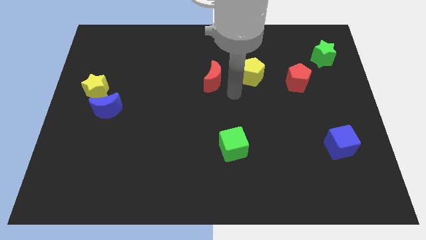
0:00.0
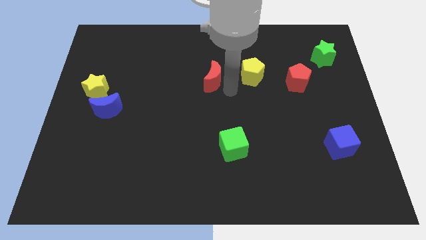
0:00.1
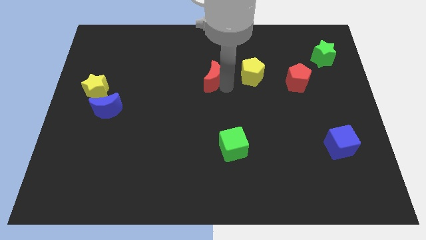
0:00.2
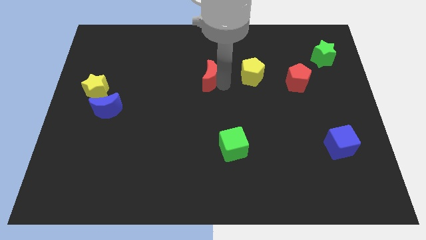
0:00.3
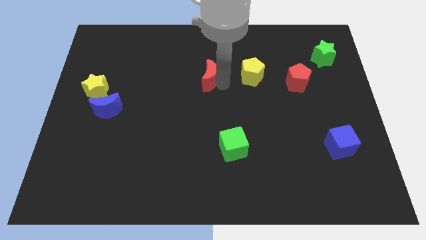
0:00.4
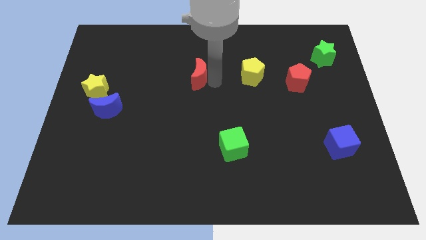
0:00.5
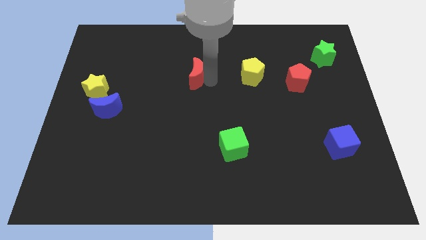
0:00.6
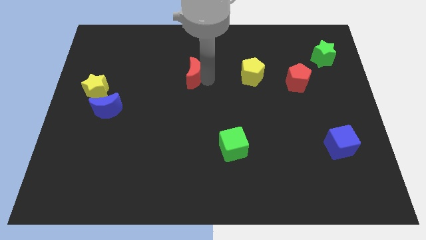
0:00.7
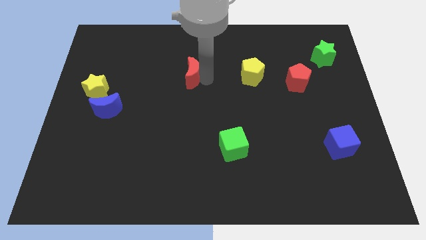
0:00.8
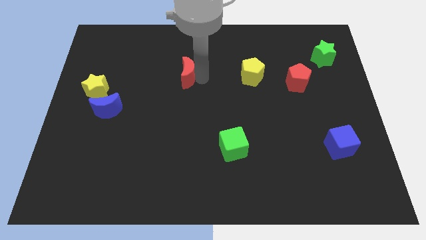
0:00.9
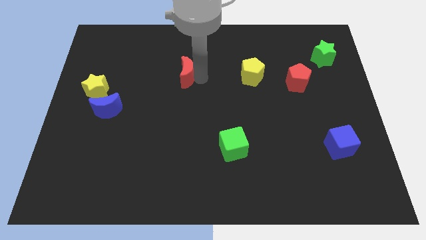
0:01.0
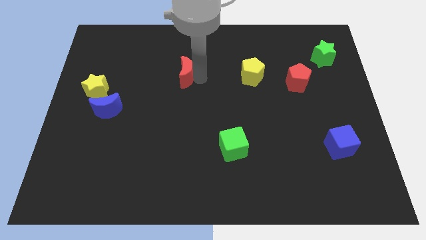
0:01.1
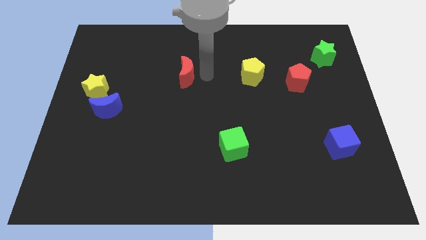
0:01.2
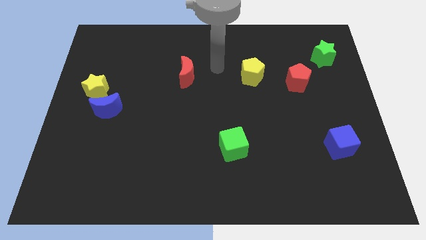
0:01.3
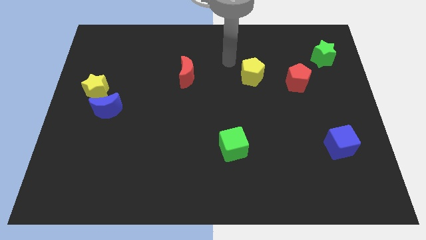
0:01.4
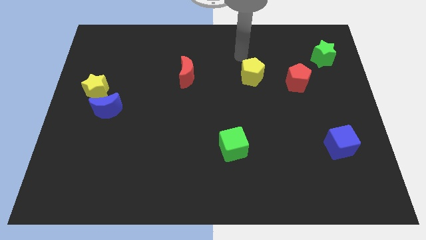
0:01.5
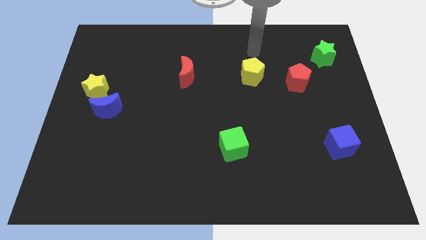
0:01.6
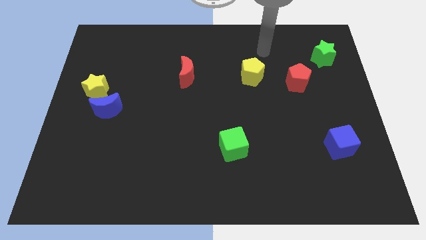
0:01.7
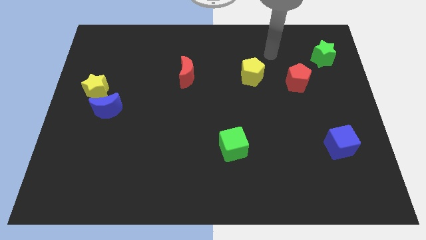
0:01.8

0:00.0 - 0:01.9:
move the red moon slightly to the left

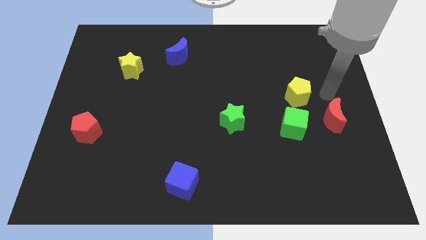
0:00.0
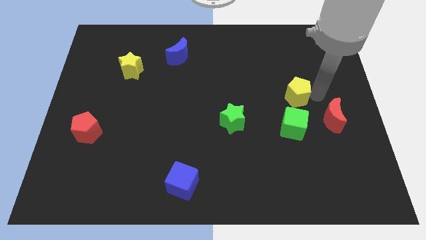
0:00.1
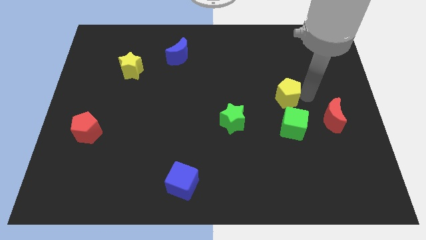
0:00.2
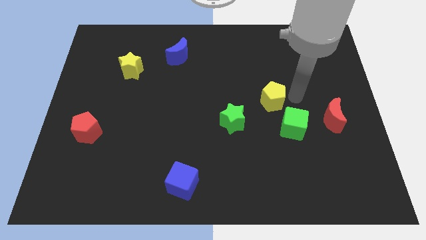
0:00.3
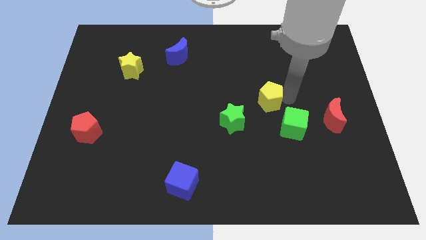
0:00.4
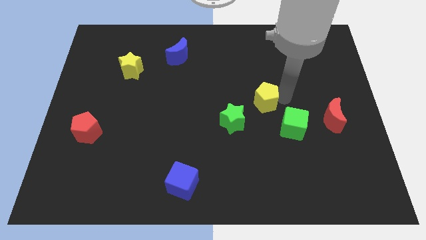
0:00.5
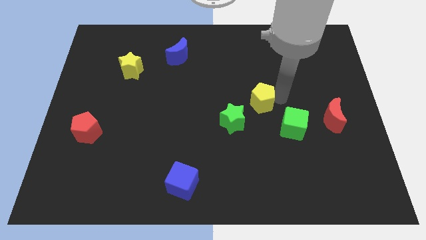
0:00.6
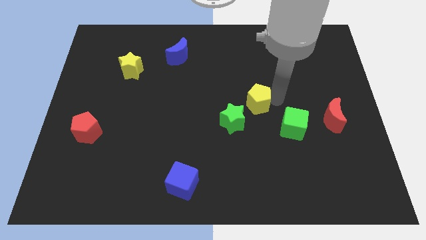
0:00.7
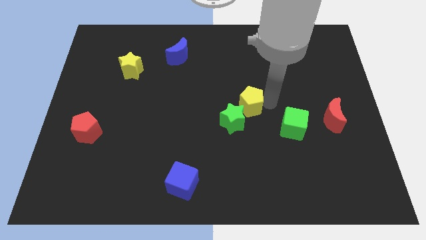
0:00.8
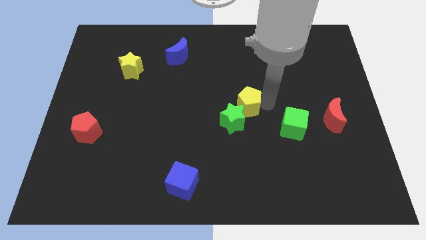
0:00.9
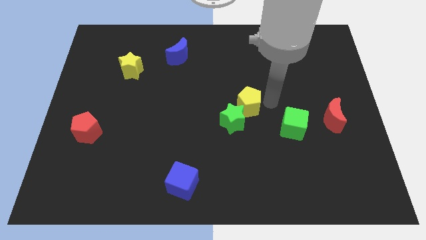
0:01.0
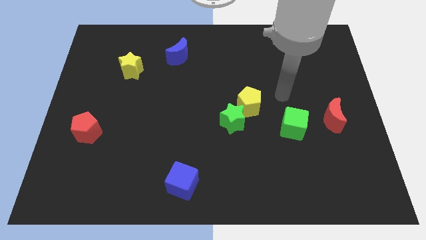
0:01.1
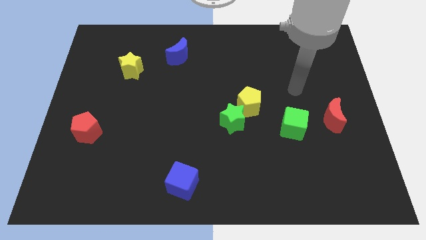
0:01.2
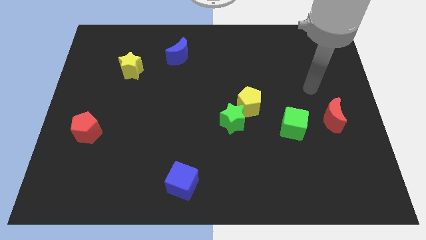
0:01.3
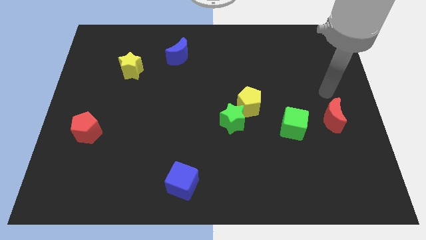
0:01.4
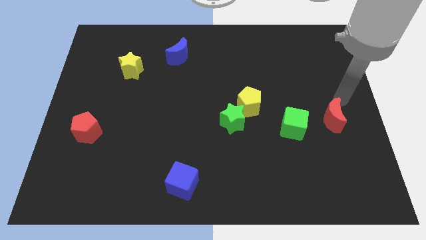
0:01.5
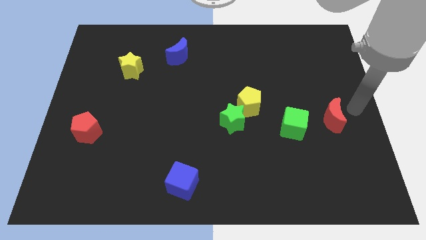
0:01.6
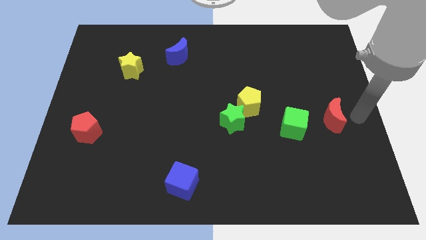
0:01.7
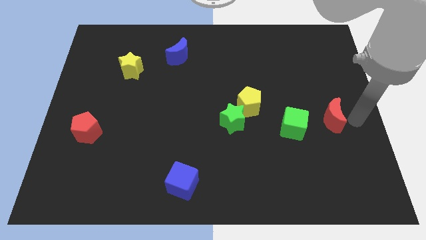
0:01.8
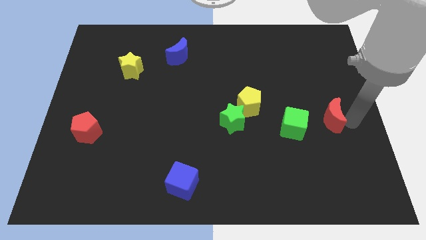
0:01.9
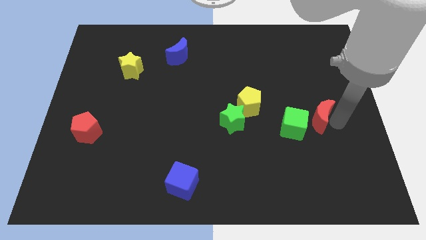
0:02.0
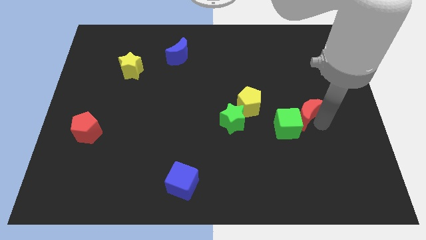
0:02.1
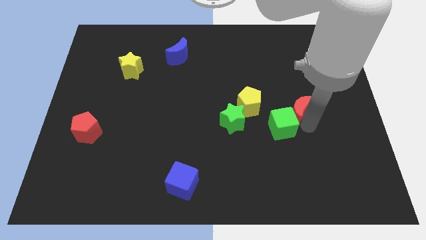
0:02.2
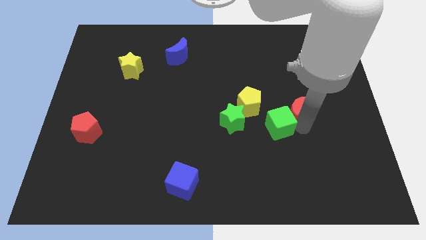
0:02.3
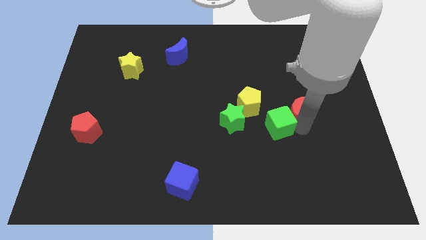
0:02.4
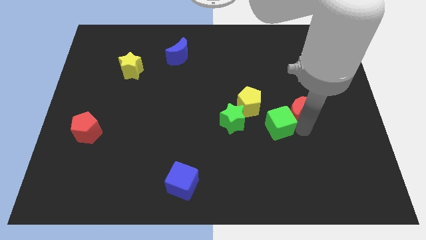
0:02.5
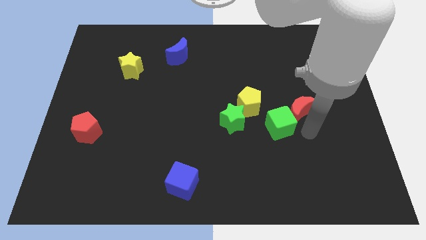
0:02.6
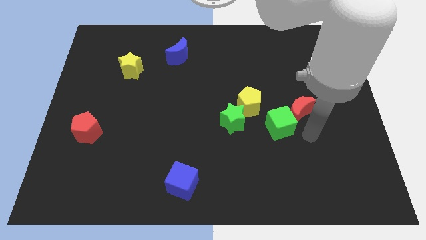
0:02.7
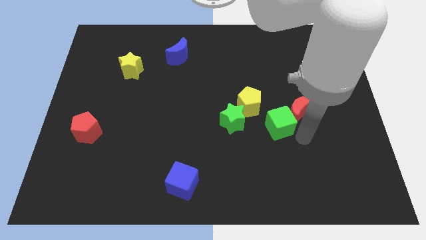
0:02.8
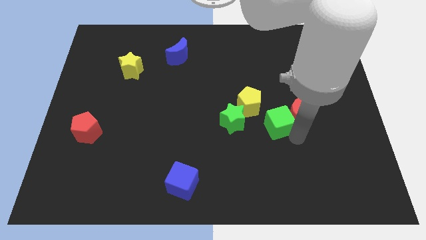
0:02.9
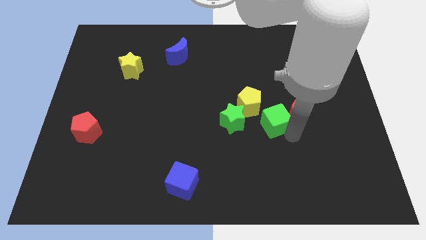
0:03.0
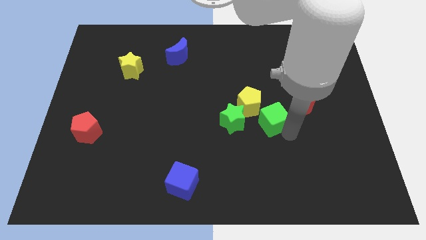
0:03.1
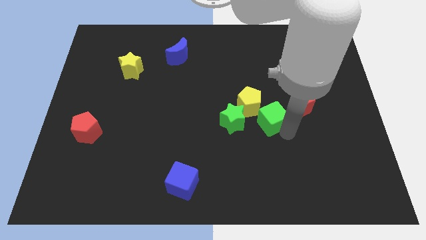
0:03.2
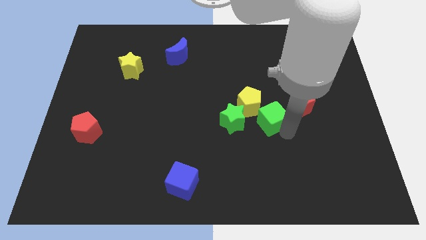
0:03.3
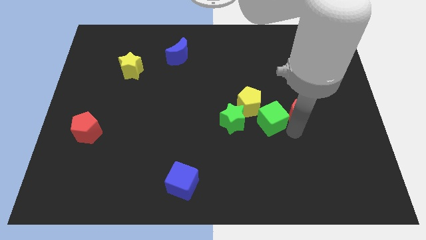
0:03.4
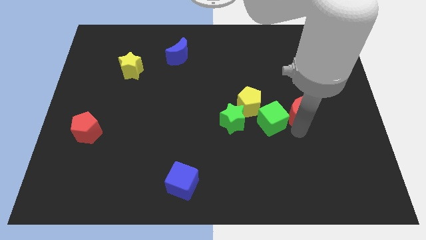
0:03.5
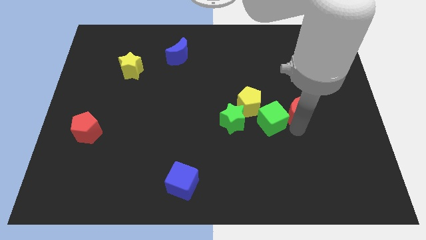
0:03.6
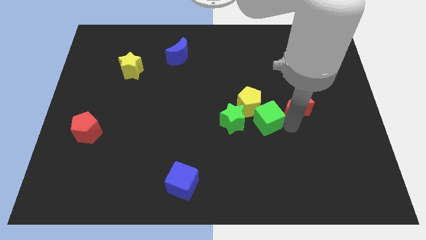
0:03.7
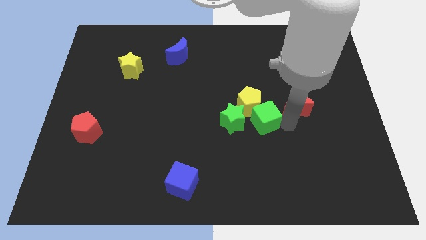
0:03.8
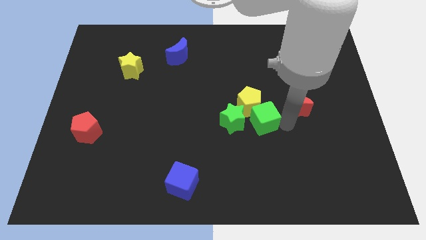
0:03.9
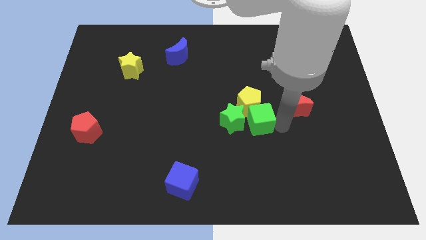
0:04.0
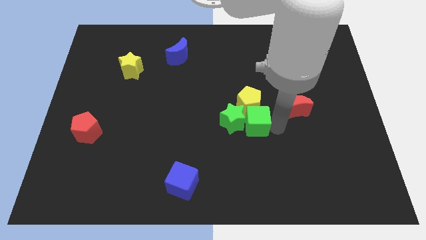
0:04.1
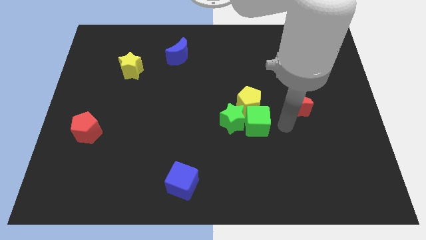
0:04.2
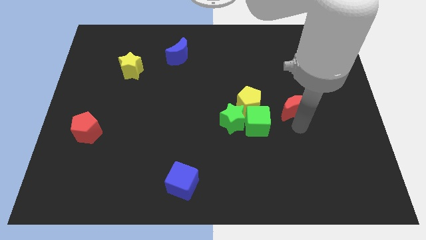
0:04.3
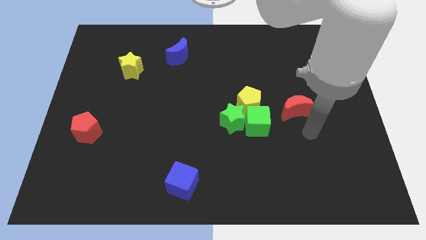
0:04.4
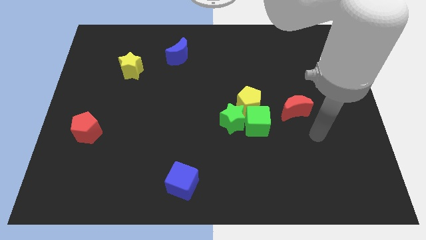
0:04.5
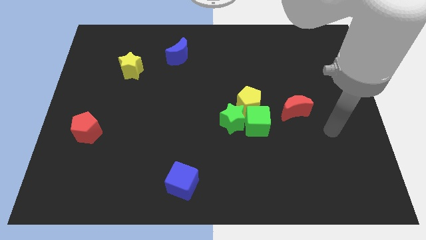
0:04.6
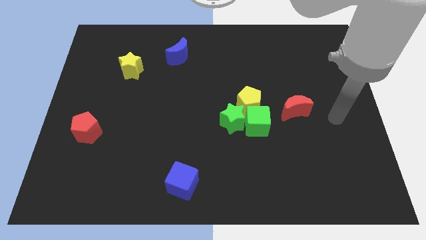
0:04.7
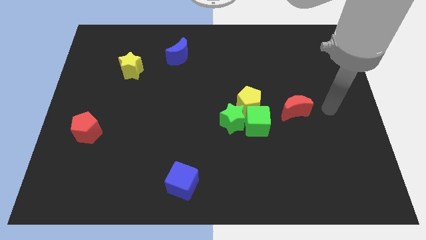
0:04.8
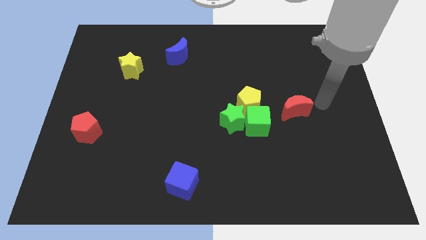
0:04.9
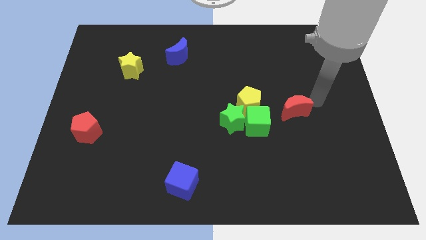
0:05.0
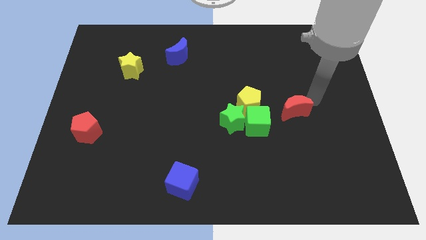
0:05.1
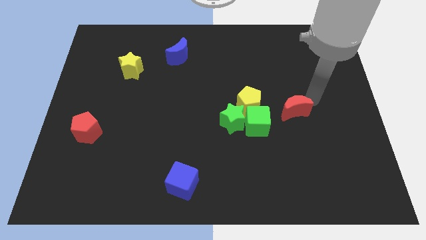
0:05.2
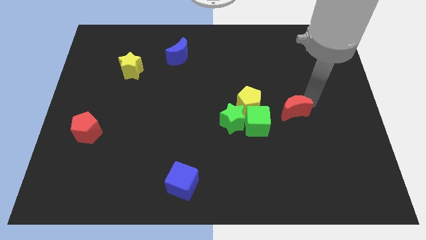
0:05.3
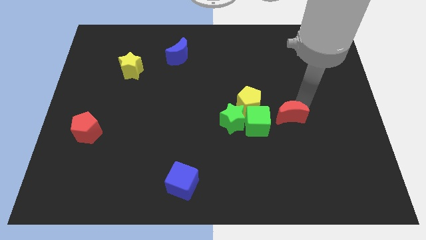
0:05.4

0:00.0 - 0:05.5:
move the group of objects towards the center of the board

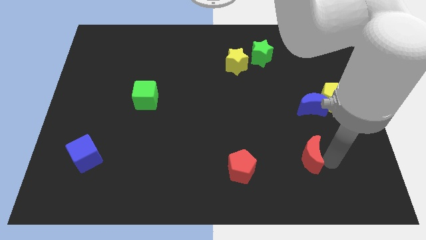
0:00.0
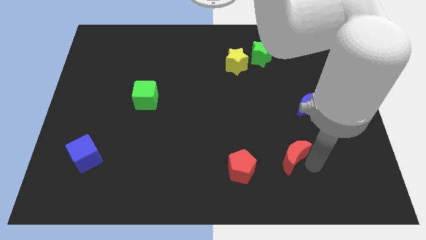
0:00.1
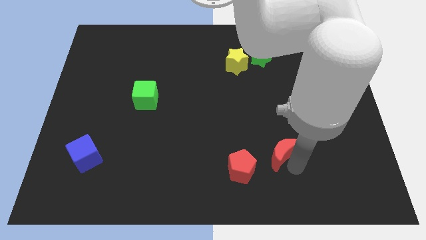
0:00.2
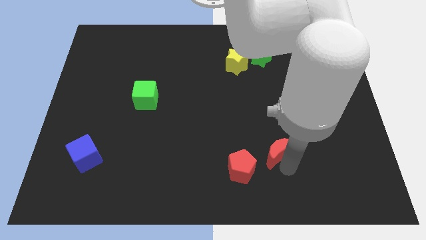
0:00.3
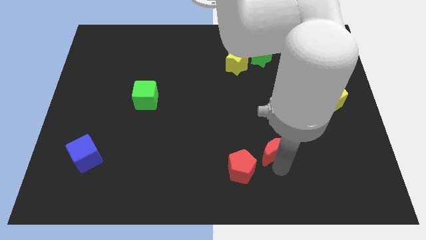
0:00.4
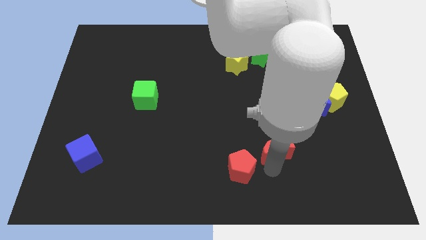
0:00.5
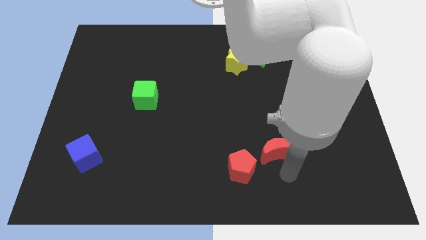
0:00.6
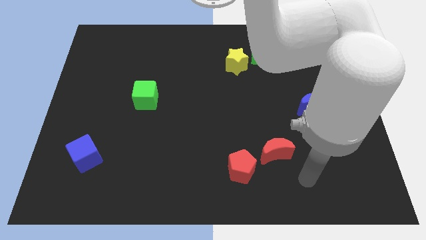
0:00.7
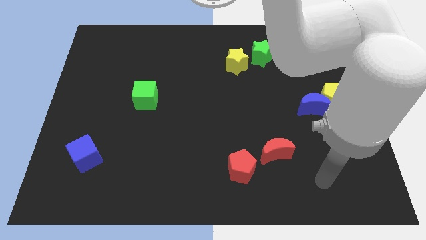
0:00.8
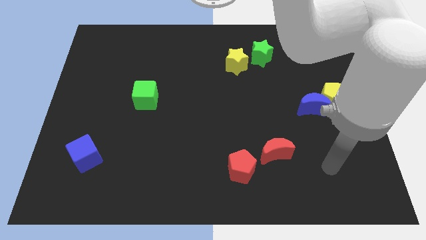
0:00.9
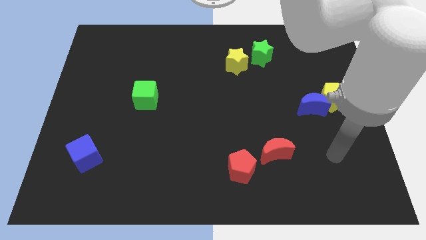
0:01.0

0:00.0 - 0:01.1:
place the red crescent towards the top right side of the red pentagon

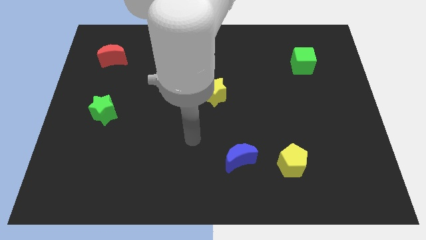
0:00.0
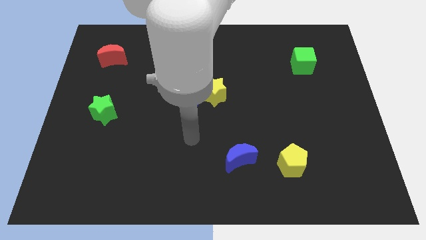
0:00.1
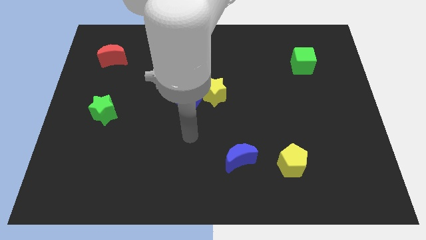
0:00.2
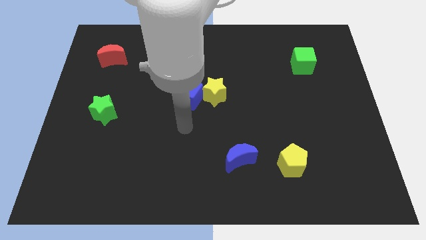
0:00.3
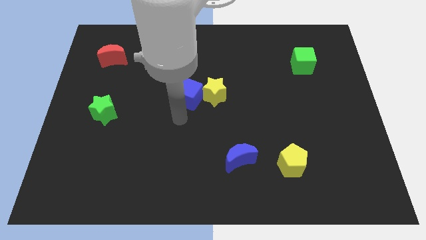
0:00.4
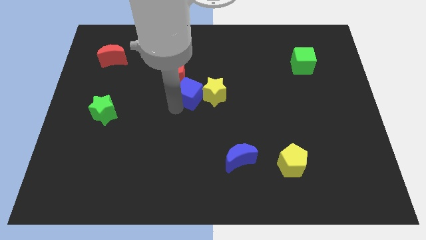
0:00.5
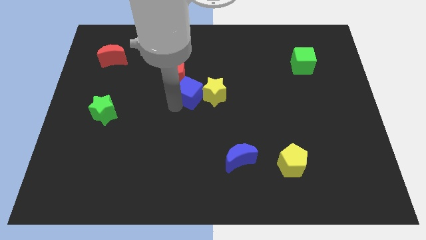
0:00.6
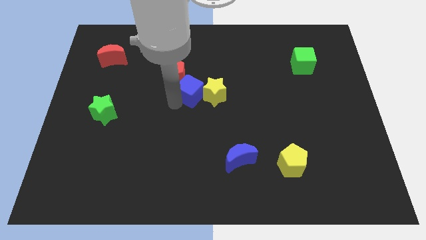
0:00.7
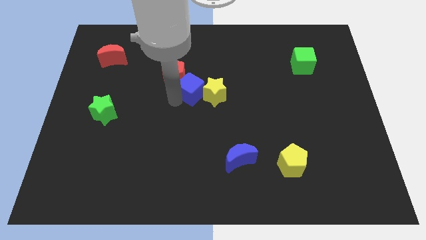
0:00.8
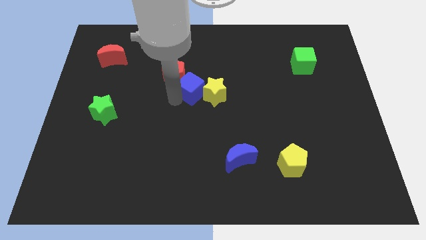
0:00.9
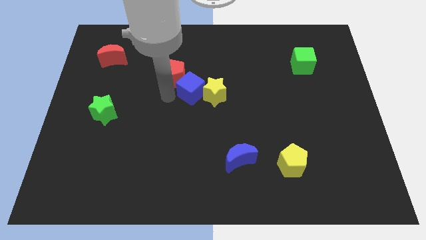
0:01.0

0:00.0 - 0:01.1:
move the blue cube slightly in between the yellow star and red pentagon
